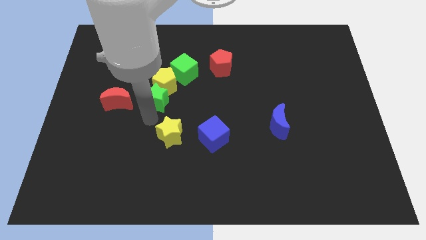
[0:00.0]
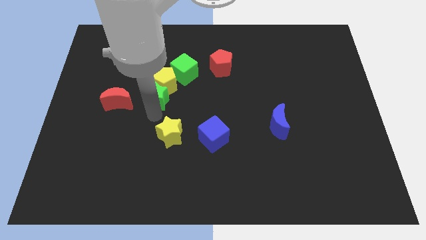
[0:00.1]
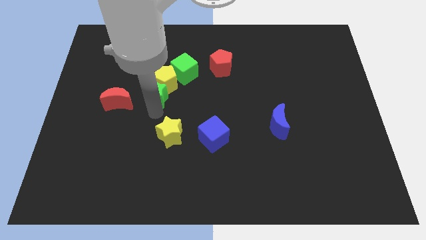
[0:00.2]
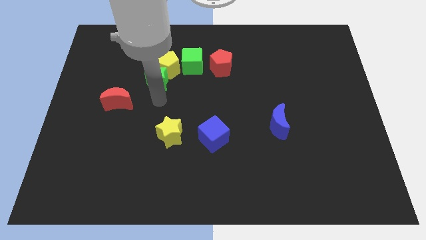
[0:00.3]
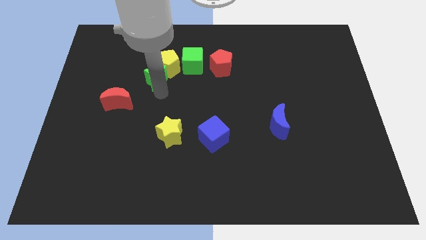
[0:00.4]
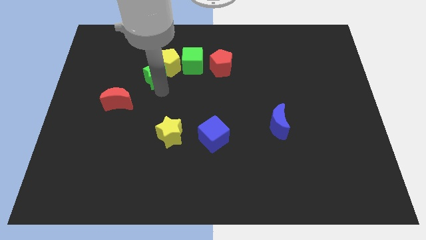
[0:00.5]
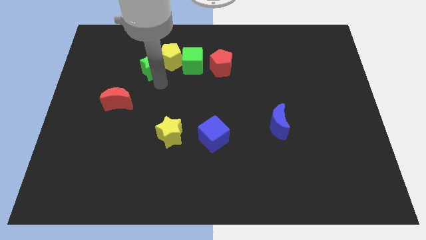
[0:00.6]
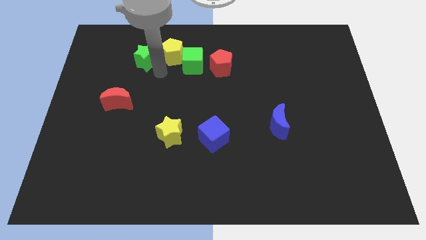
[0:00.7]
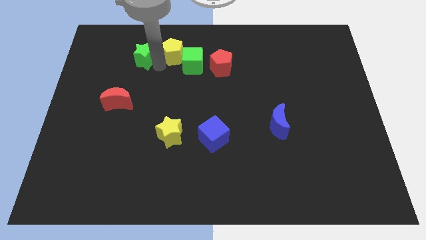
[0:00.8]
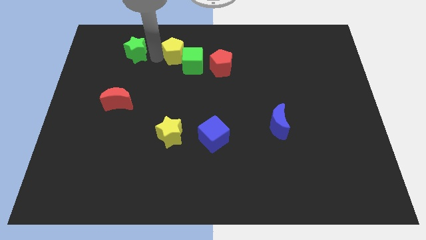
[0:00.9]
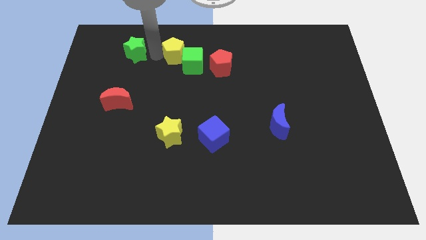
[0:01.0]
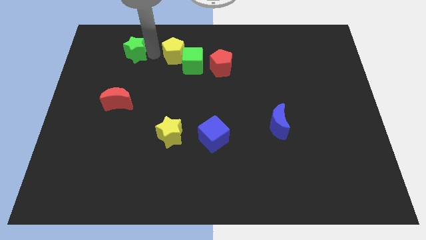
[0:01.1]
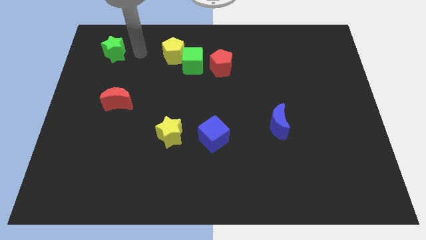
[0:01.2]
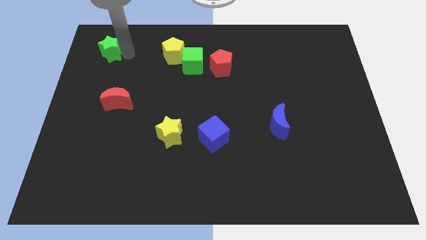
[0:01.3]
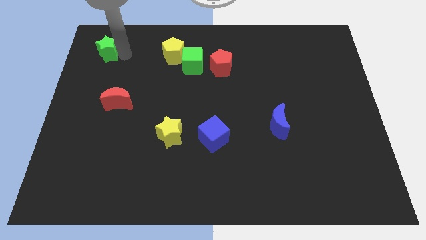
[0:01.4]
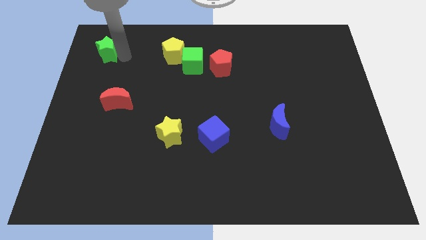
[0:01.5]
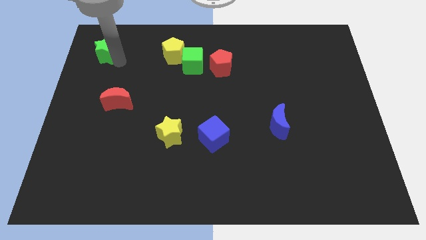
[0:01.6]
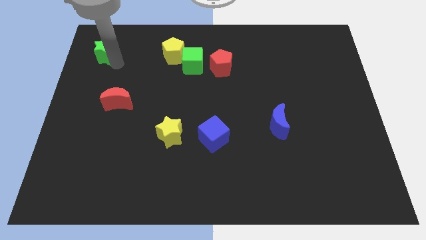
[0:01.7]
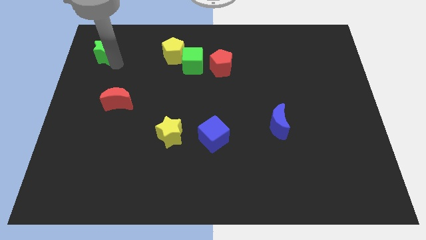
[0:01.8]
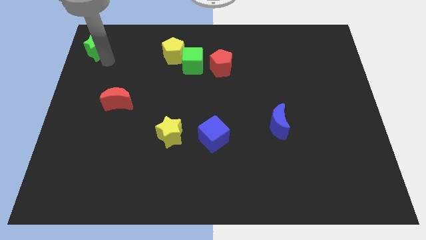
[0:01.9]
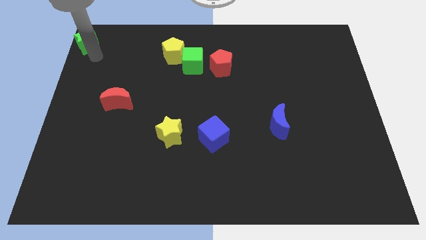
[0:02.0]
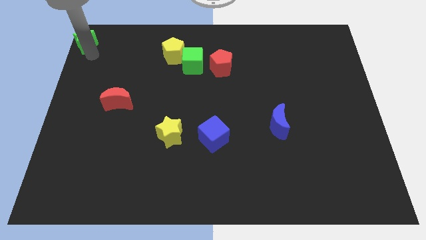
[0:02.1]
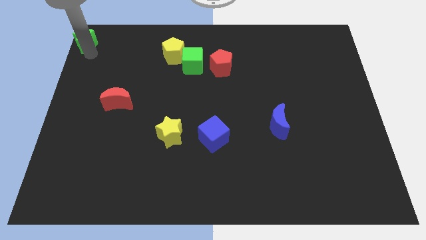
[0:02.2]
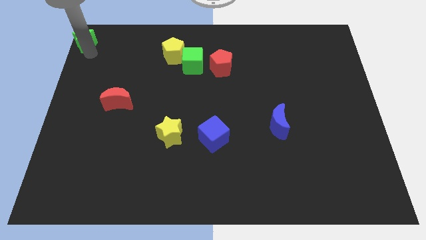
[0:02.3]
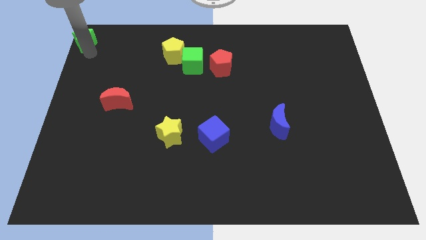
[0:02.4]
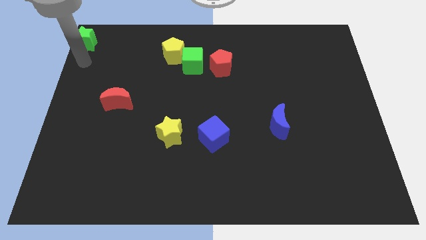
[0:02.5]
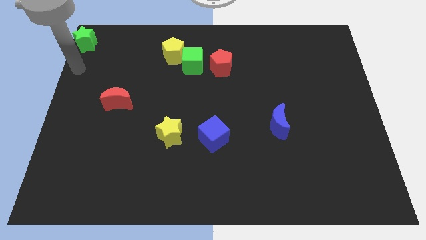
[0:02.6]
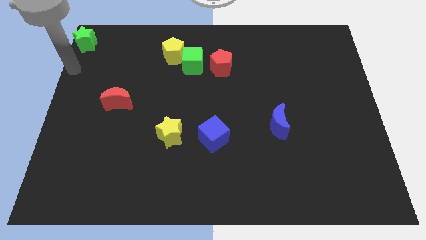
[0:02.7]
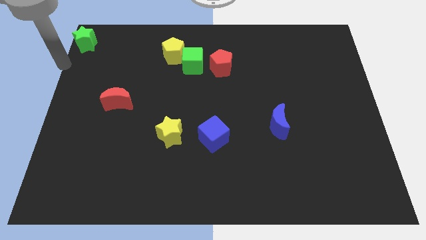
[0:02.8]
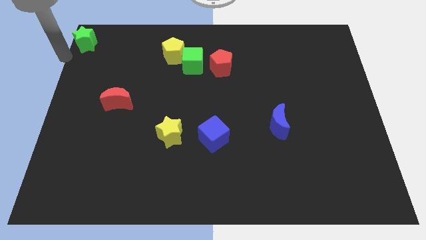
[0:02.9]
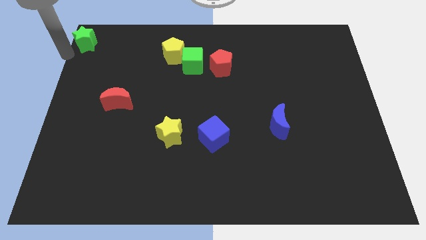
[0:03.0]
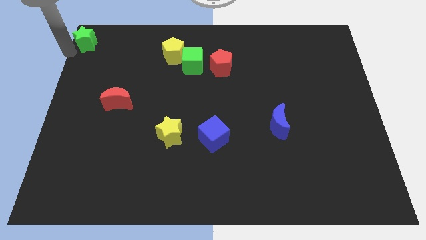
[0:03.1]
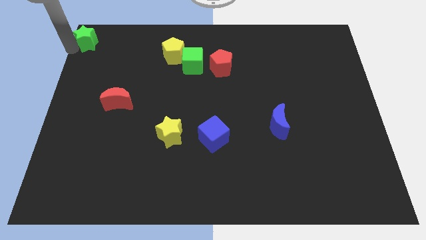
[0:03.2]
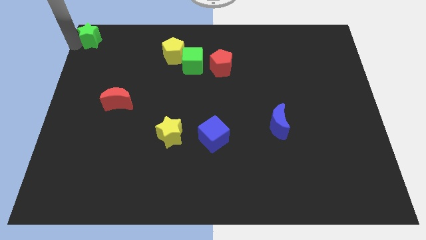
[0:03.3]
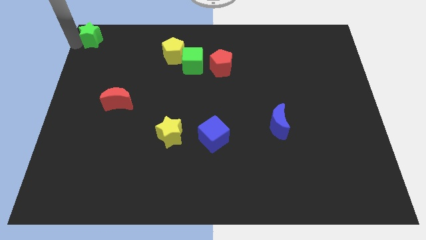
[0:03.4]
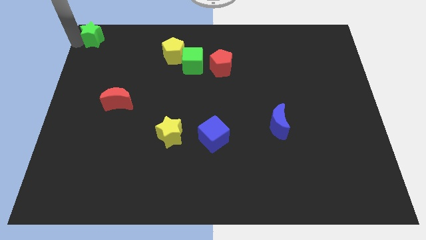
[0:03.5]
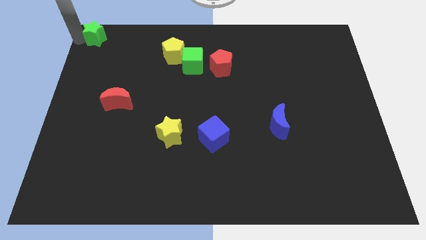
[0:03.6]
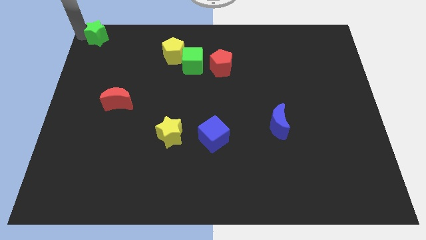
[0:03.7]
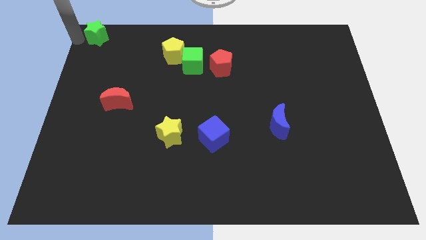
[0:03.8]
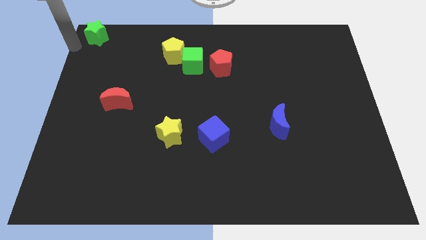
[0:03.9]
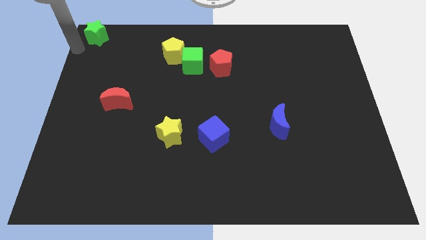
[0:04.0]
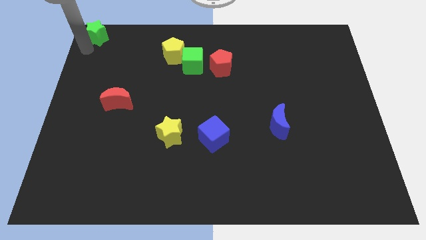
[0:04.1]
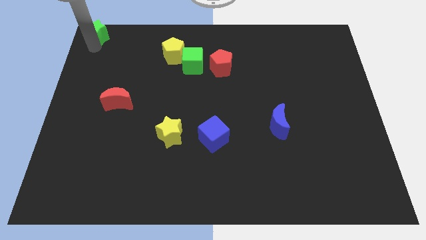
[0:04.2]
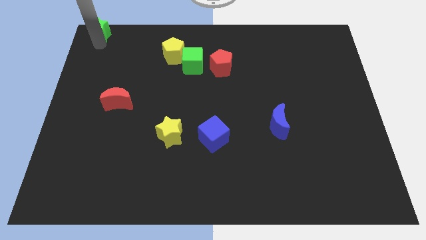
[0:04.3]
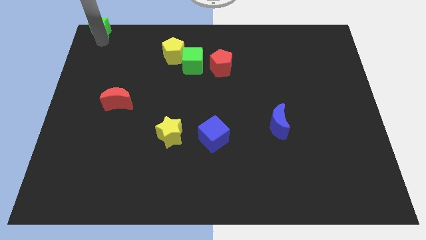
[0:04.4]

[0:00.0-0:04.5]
place green star and yellow pentagon apart

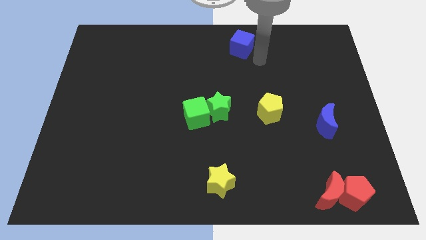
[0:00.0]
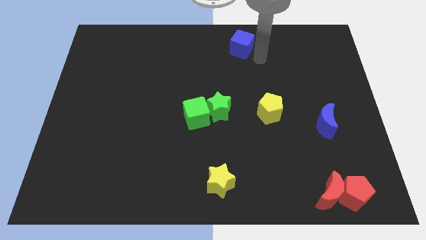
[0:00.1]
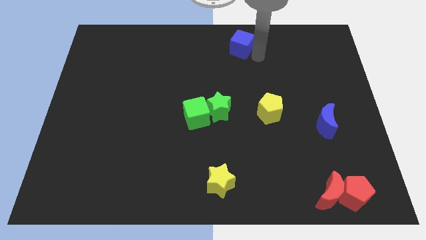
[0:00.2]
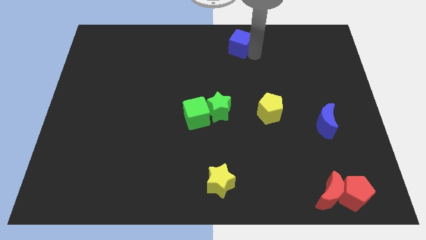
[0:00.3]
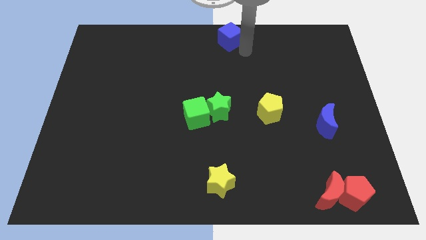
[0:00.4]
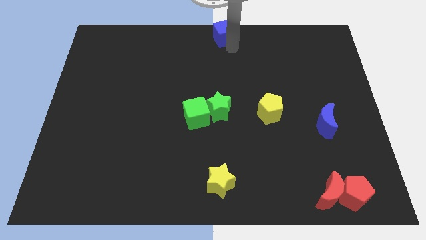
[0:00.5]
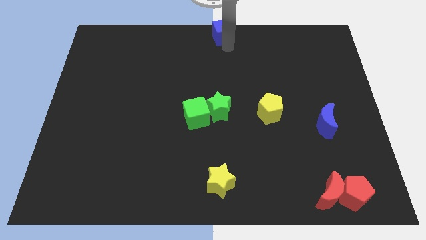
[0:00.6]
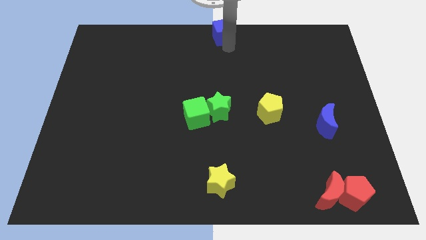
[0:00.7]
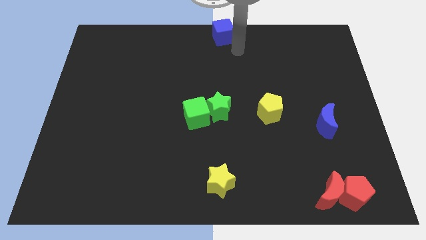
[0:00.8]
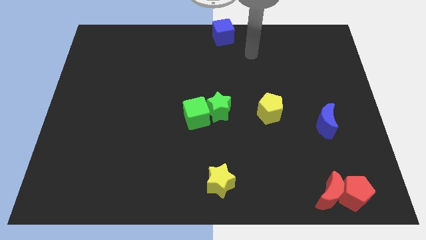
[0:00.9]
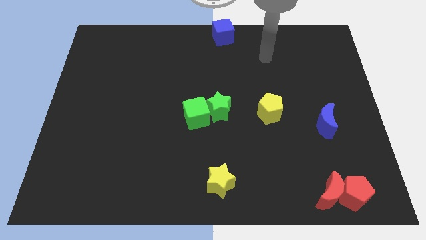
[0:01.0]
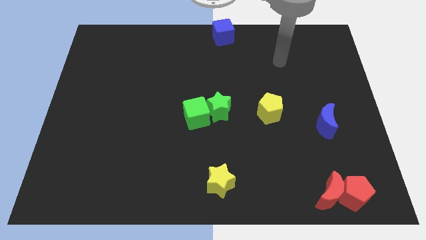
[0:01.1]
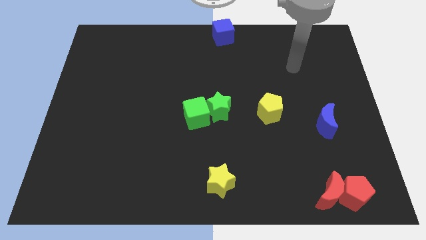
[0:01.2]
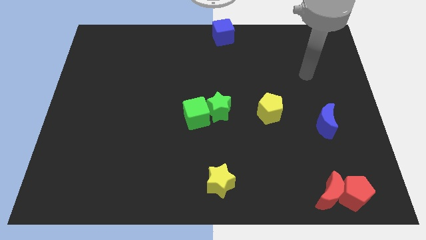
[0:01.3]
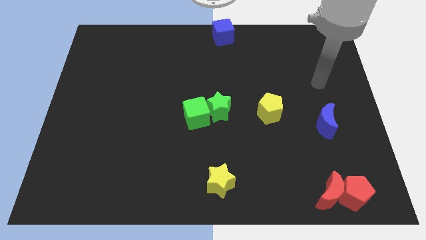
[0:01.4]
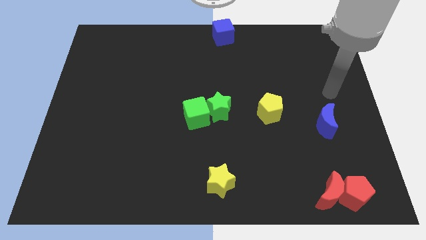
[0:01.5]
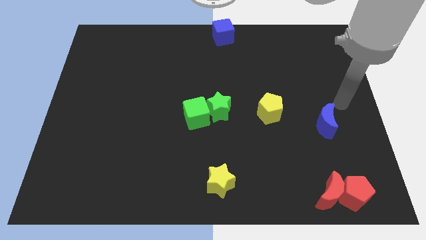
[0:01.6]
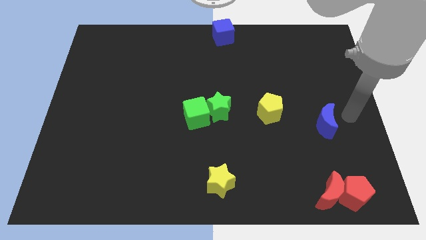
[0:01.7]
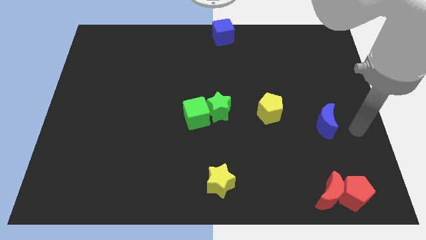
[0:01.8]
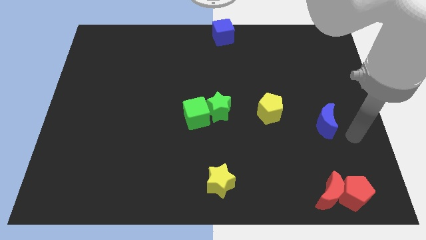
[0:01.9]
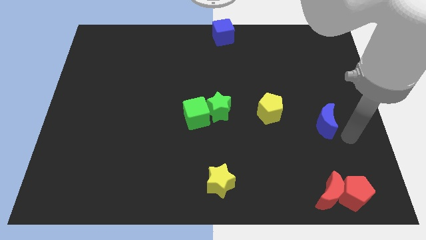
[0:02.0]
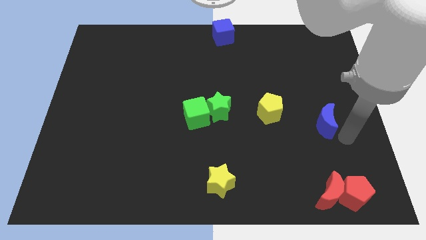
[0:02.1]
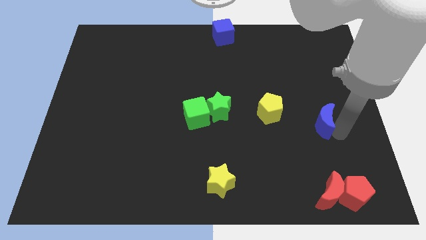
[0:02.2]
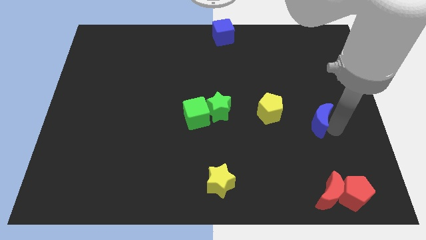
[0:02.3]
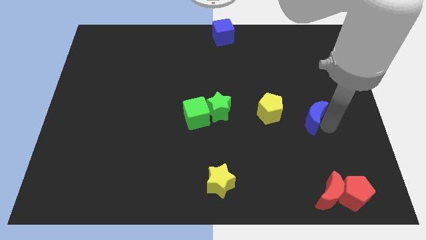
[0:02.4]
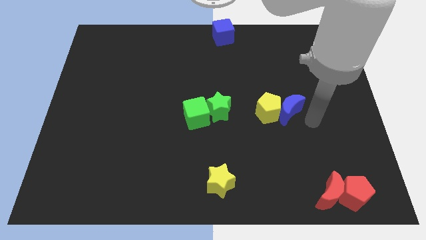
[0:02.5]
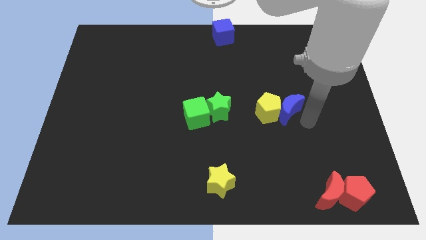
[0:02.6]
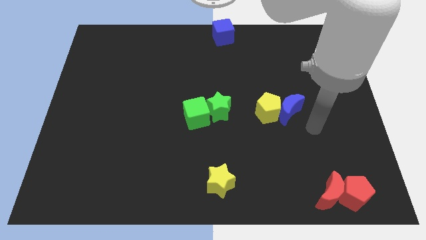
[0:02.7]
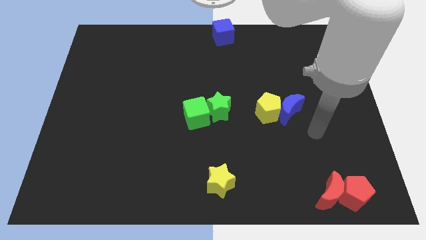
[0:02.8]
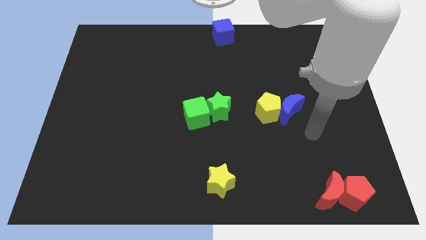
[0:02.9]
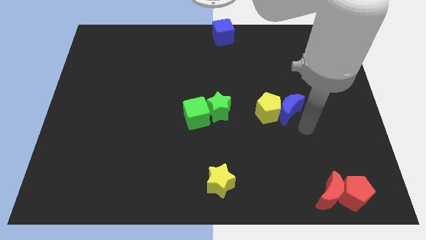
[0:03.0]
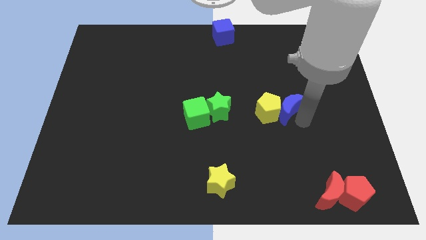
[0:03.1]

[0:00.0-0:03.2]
push the blue cube to the top center

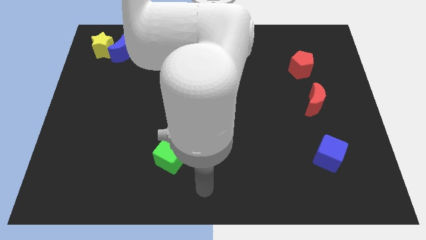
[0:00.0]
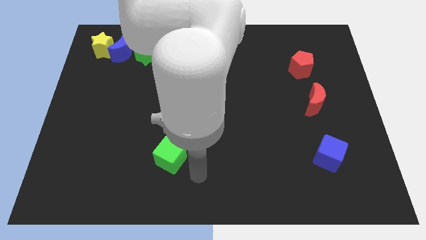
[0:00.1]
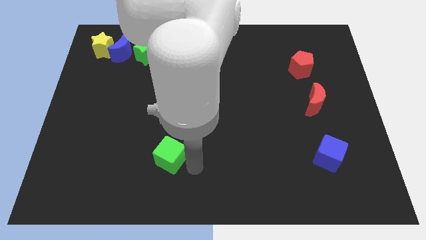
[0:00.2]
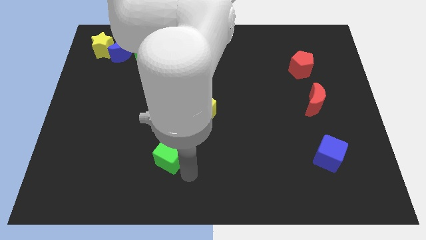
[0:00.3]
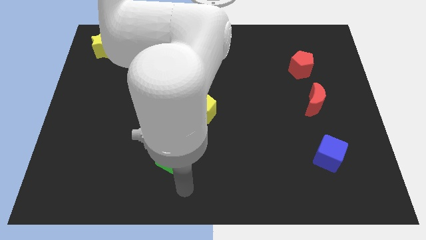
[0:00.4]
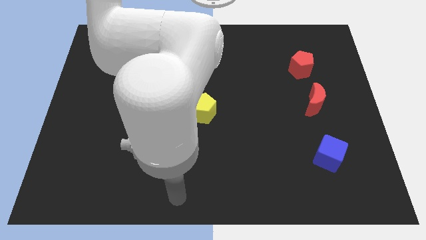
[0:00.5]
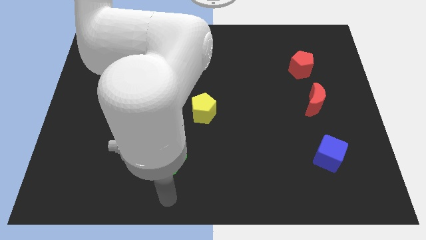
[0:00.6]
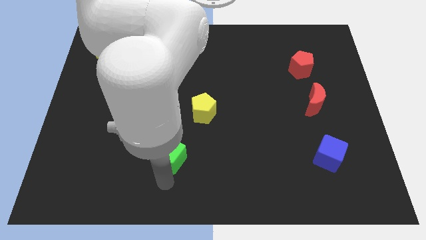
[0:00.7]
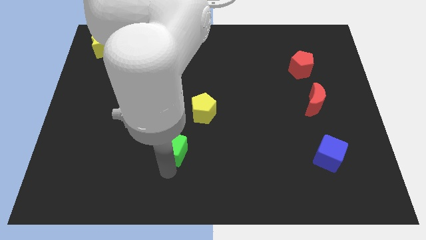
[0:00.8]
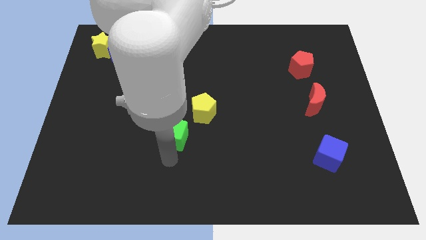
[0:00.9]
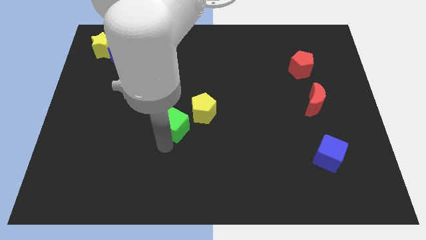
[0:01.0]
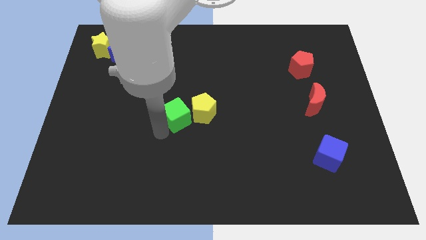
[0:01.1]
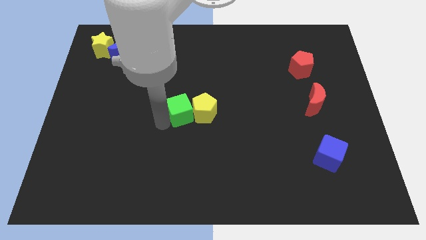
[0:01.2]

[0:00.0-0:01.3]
move the green cube to the left of the yellow pentagon
